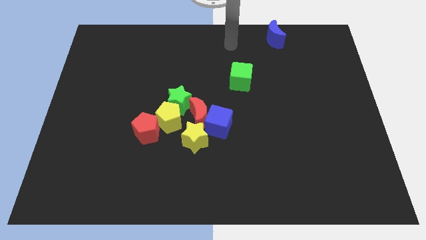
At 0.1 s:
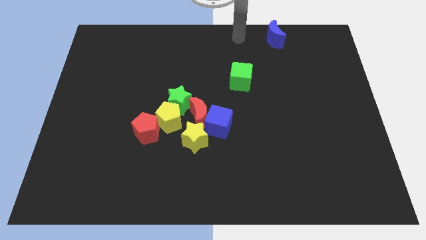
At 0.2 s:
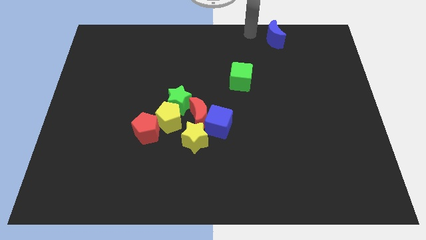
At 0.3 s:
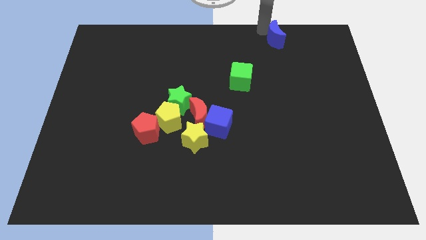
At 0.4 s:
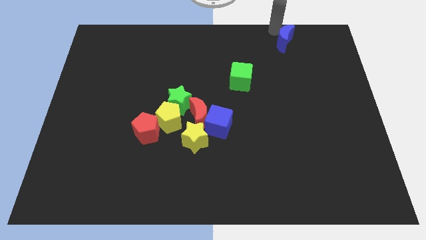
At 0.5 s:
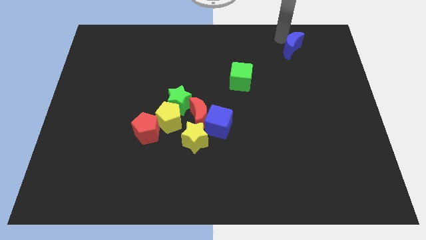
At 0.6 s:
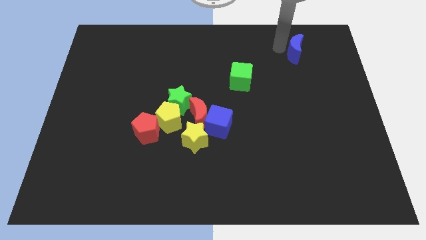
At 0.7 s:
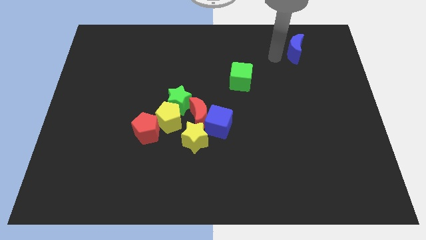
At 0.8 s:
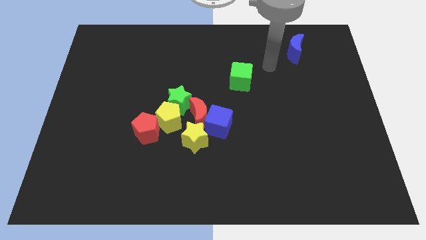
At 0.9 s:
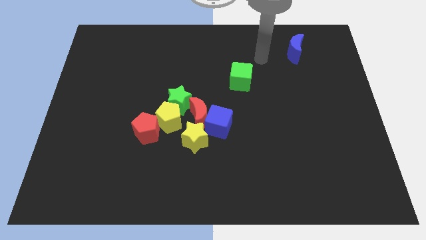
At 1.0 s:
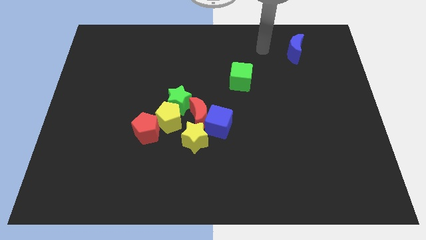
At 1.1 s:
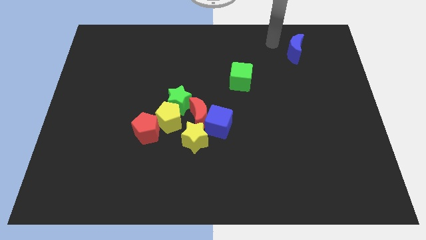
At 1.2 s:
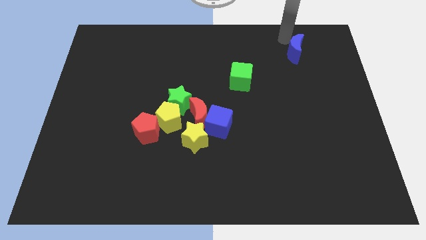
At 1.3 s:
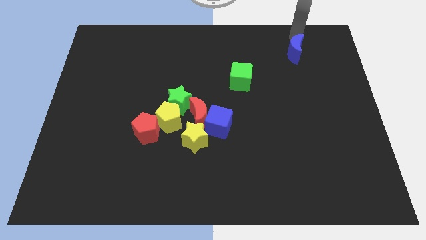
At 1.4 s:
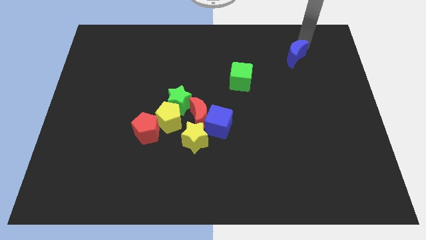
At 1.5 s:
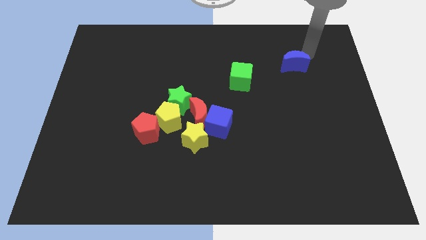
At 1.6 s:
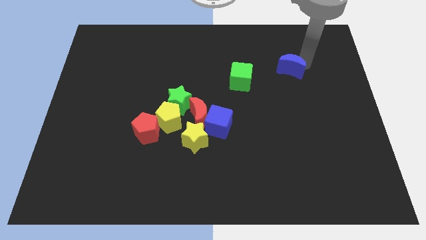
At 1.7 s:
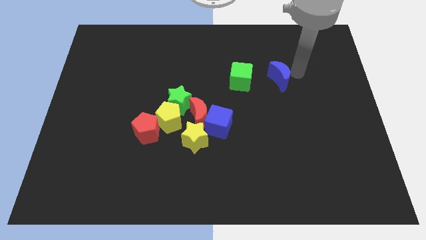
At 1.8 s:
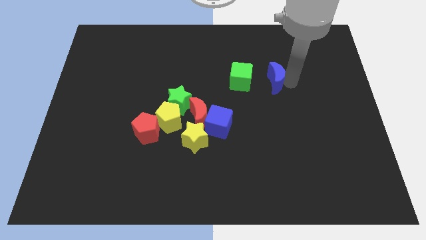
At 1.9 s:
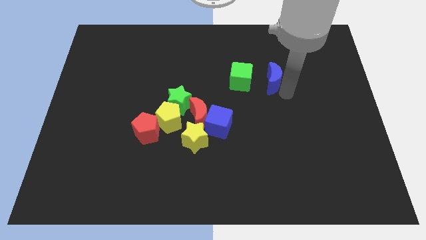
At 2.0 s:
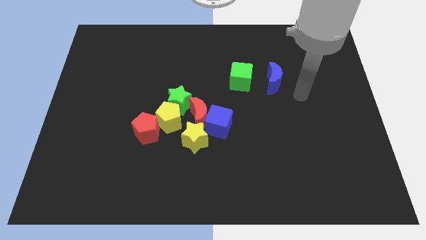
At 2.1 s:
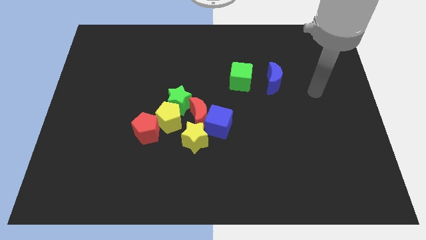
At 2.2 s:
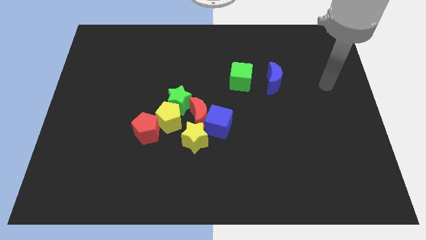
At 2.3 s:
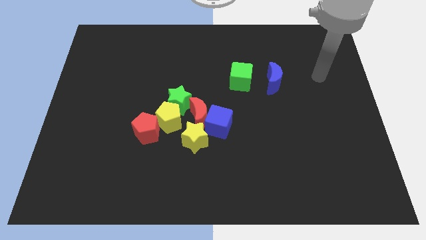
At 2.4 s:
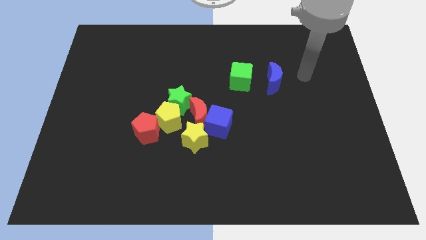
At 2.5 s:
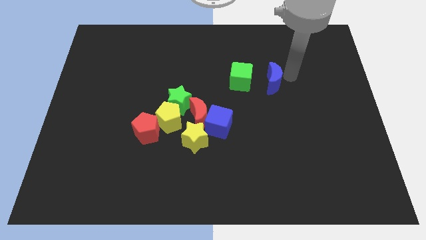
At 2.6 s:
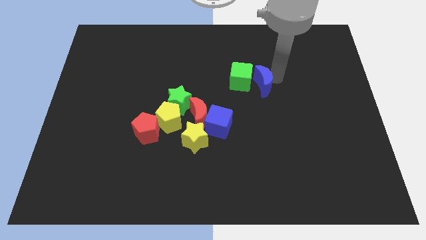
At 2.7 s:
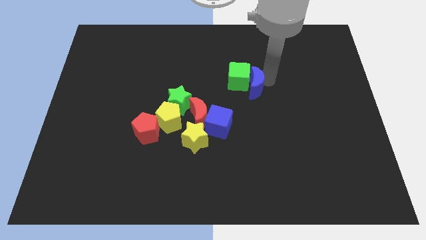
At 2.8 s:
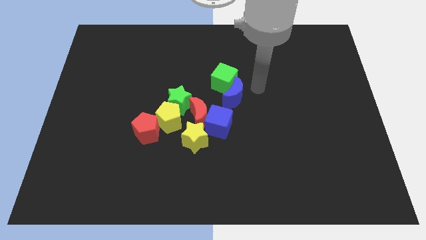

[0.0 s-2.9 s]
push the blue crescent into the green cube

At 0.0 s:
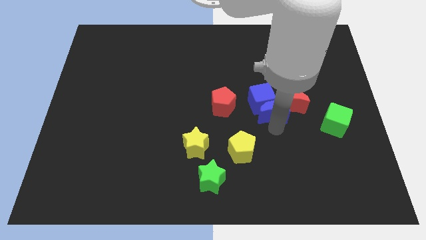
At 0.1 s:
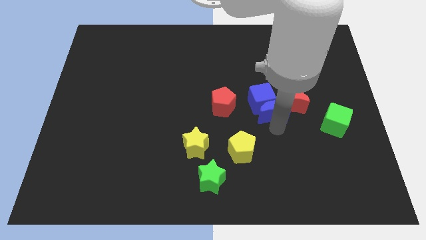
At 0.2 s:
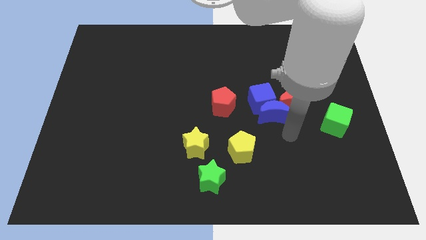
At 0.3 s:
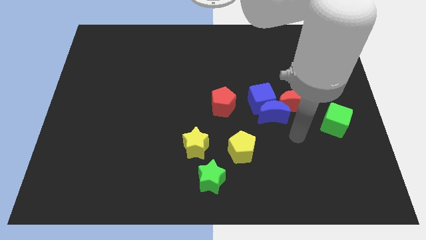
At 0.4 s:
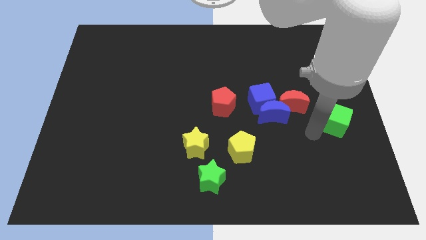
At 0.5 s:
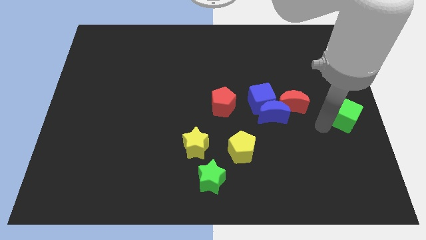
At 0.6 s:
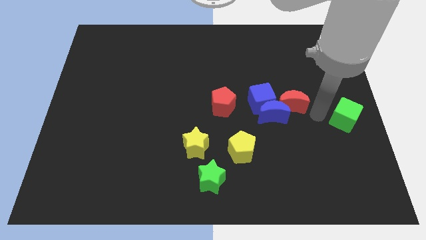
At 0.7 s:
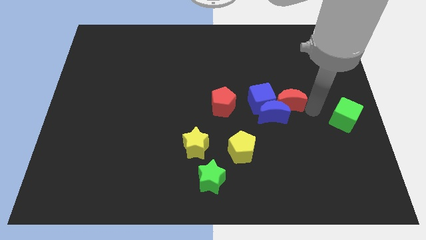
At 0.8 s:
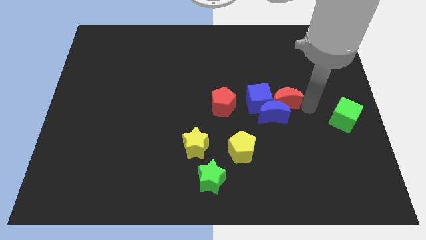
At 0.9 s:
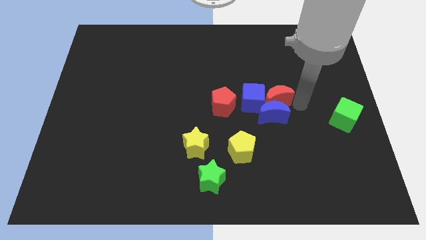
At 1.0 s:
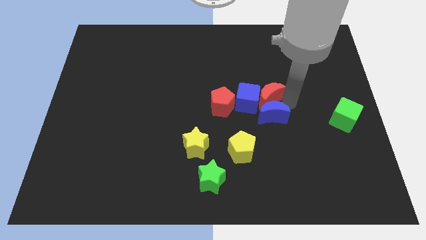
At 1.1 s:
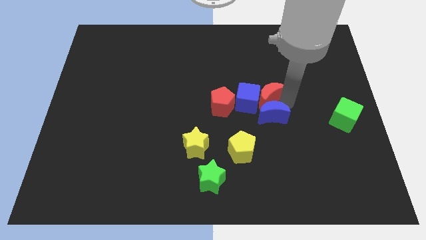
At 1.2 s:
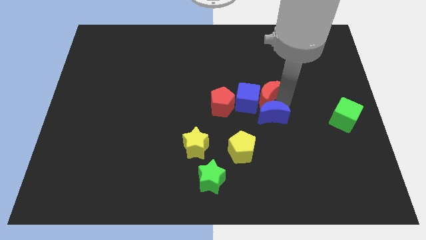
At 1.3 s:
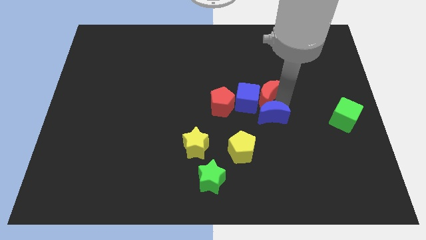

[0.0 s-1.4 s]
push the red crescent into the right side of the blue cube

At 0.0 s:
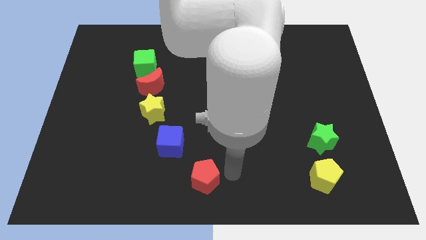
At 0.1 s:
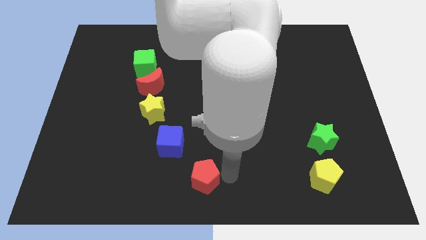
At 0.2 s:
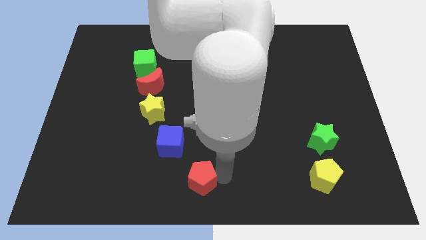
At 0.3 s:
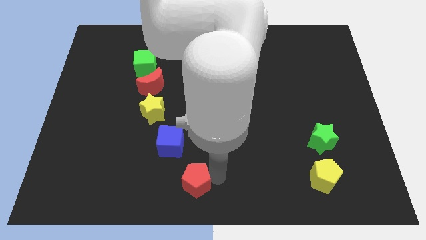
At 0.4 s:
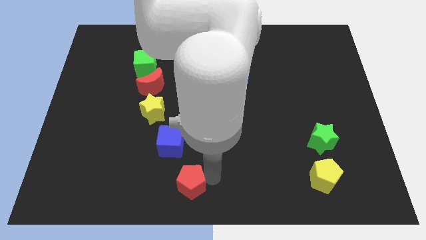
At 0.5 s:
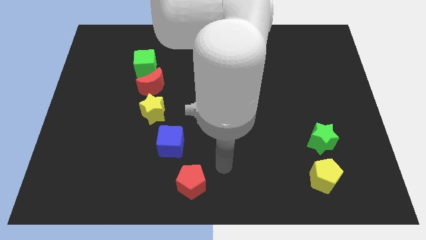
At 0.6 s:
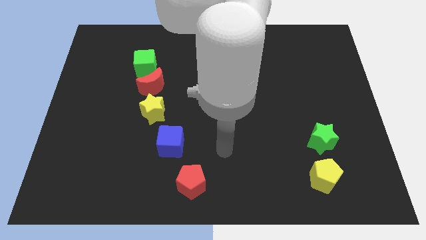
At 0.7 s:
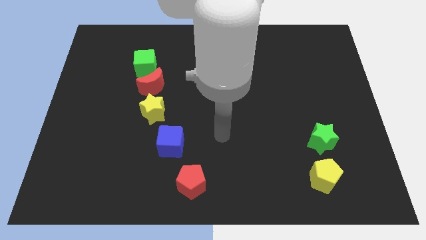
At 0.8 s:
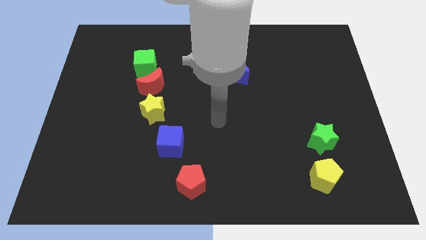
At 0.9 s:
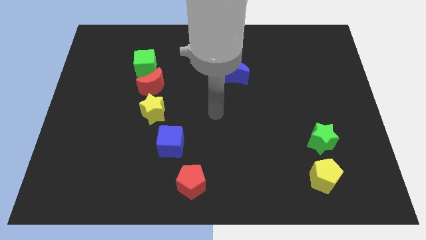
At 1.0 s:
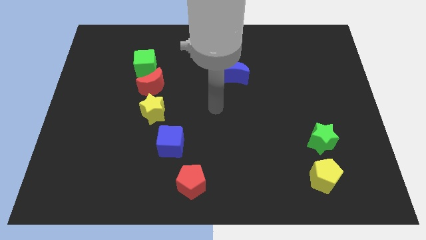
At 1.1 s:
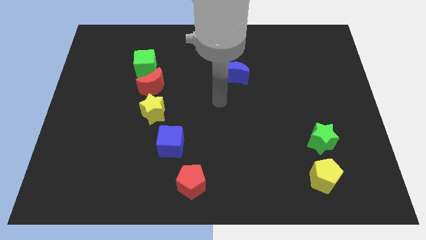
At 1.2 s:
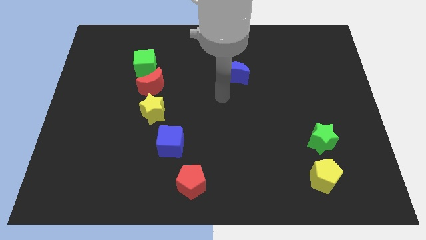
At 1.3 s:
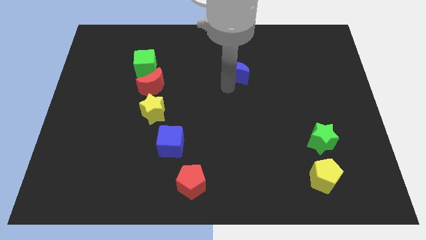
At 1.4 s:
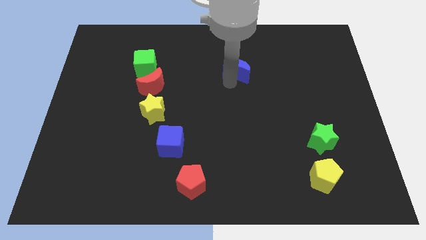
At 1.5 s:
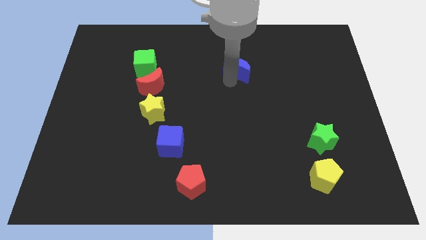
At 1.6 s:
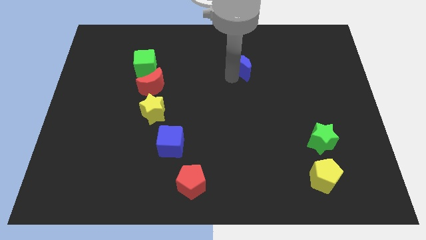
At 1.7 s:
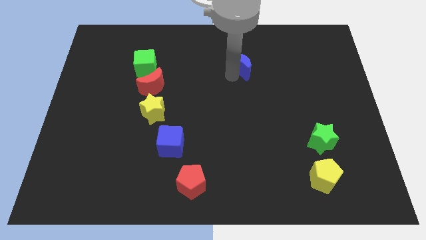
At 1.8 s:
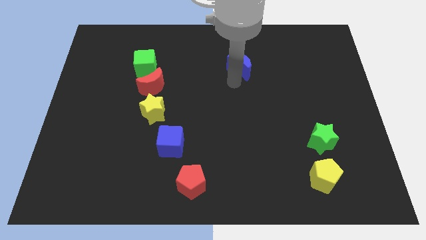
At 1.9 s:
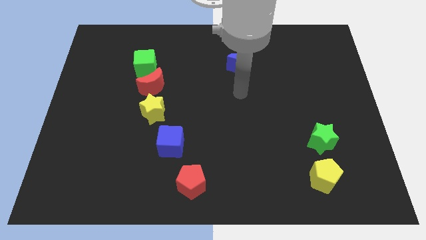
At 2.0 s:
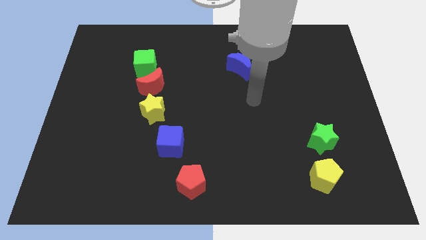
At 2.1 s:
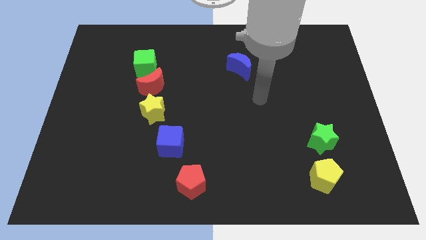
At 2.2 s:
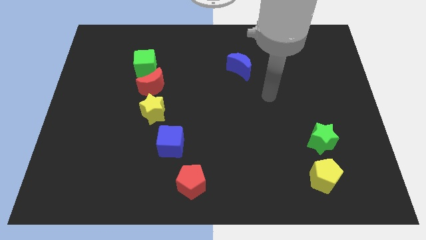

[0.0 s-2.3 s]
move your arm towards the blue crescent

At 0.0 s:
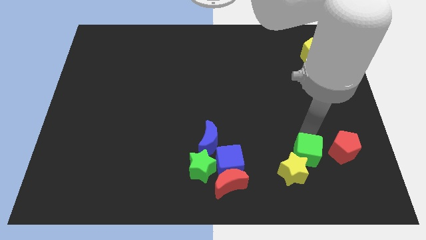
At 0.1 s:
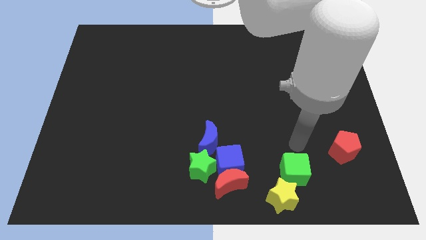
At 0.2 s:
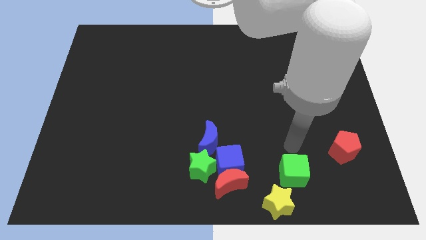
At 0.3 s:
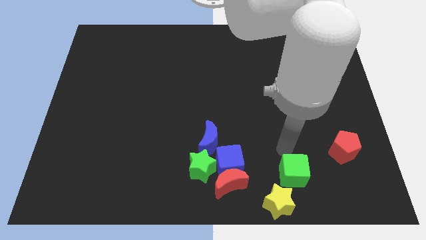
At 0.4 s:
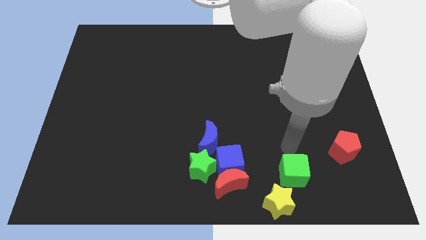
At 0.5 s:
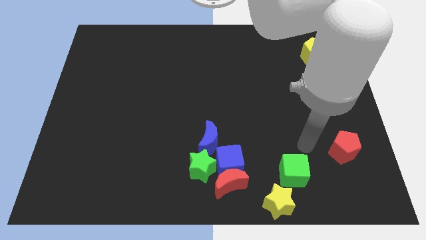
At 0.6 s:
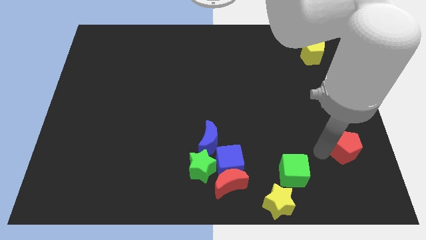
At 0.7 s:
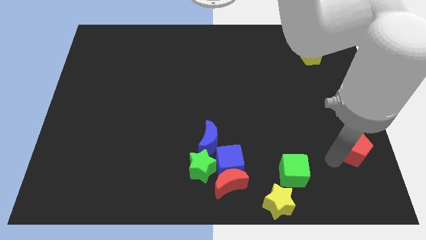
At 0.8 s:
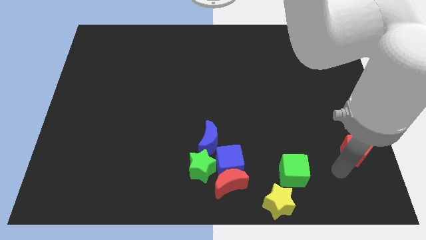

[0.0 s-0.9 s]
push the green cube towards the bottom

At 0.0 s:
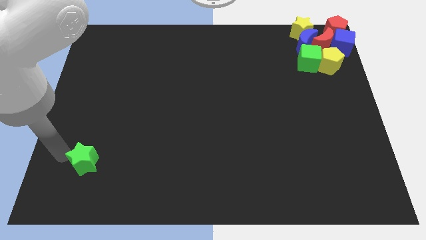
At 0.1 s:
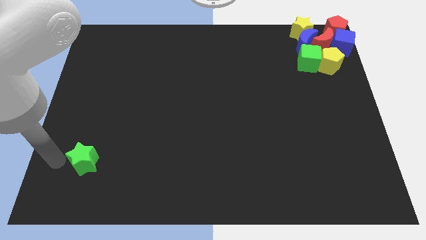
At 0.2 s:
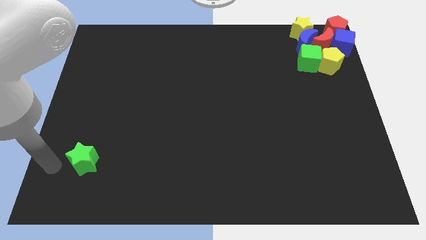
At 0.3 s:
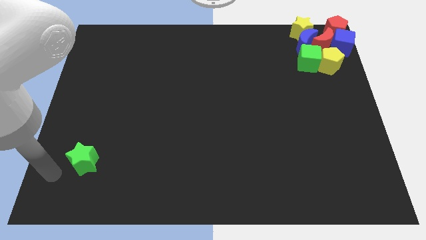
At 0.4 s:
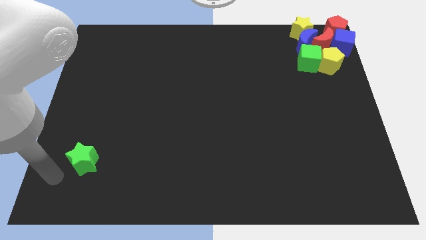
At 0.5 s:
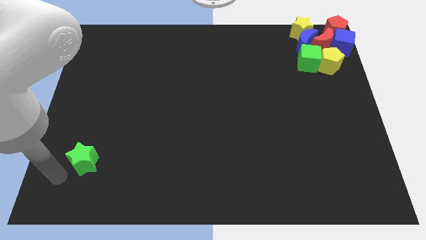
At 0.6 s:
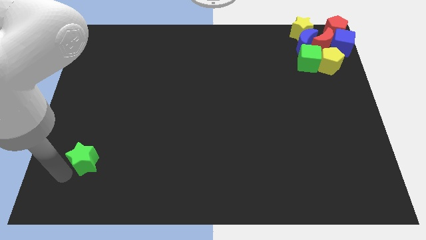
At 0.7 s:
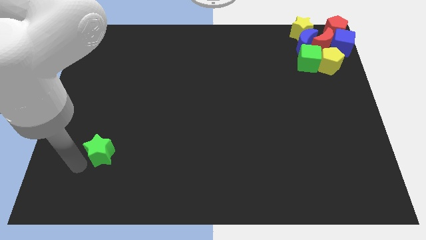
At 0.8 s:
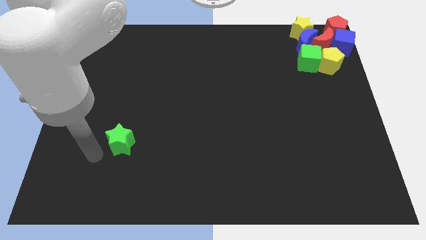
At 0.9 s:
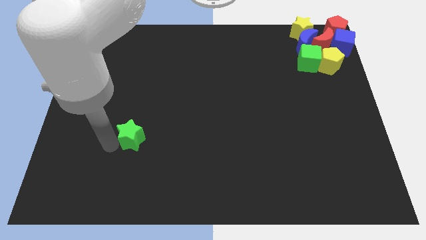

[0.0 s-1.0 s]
push the green star towards up

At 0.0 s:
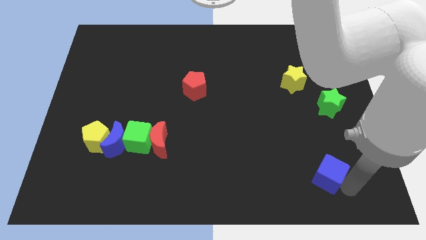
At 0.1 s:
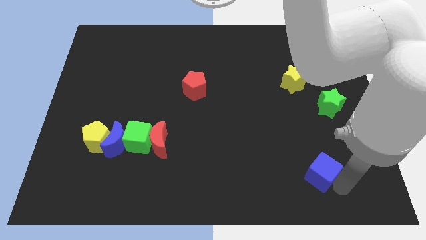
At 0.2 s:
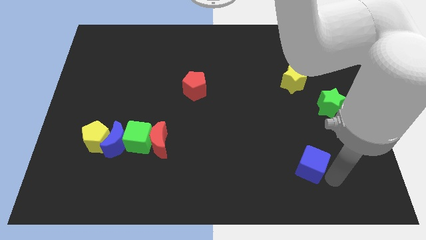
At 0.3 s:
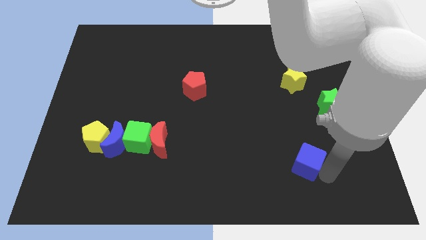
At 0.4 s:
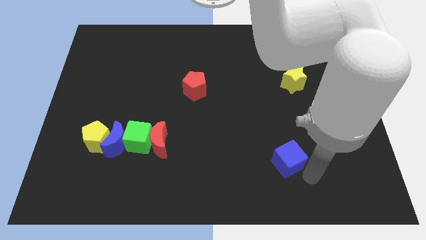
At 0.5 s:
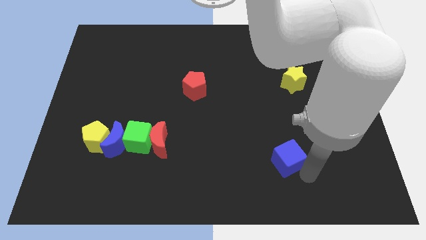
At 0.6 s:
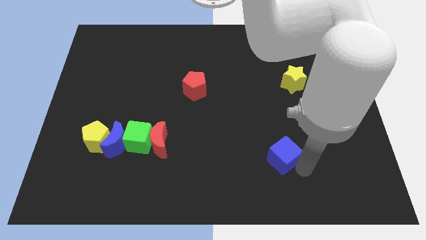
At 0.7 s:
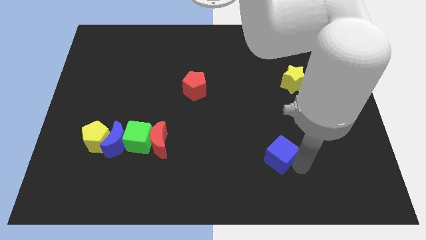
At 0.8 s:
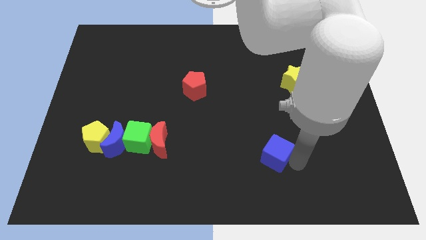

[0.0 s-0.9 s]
move blue cube slightly left
